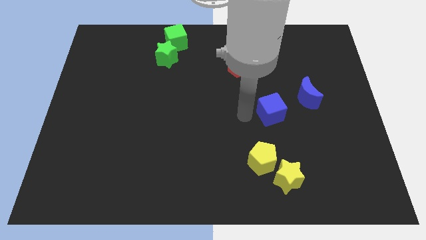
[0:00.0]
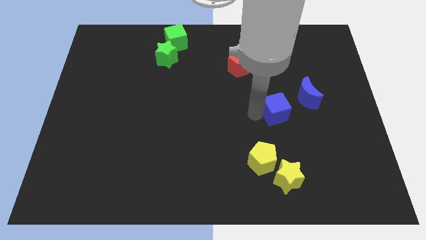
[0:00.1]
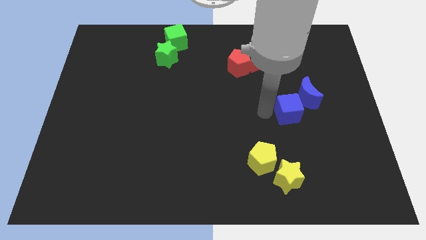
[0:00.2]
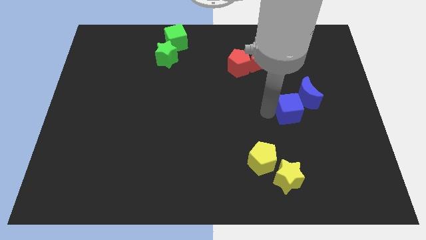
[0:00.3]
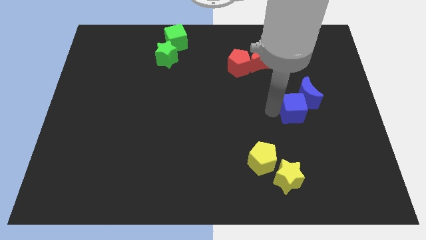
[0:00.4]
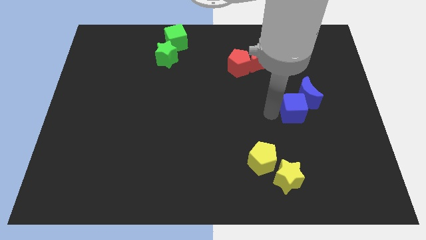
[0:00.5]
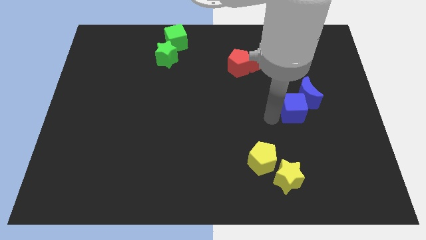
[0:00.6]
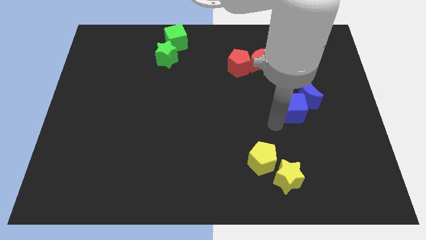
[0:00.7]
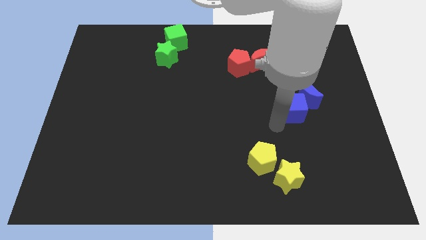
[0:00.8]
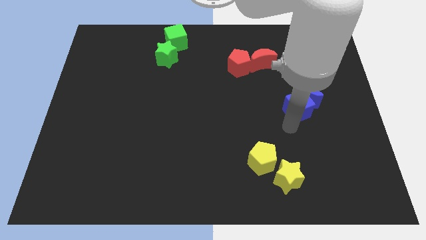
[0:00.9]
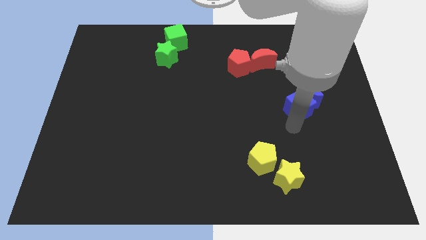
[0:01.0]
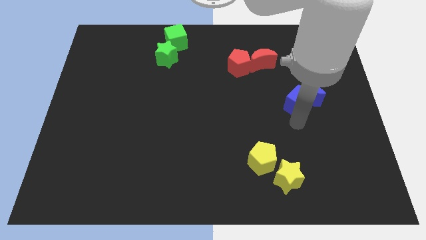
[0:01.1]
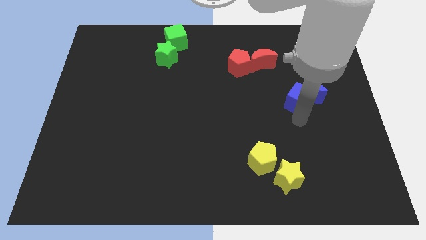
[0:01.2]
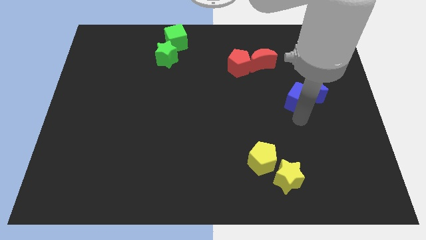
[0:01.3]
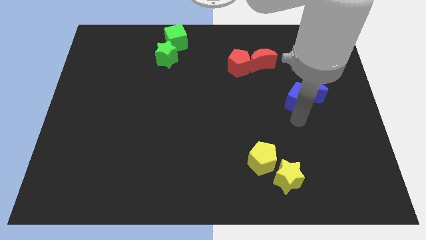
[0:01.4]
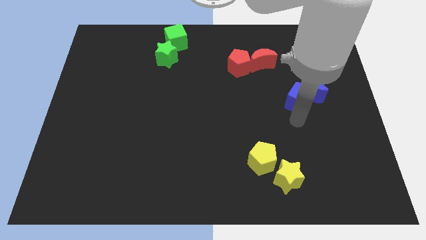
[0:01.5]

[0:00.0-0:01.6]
move the blue cube into the blue moon

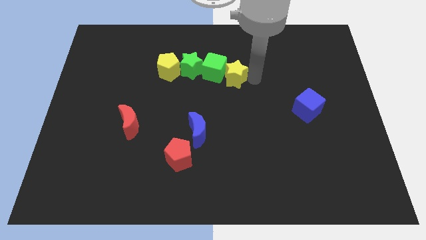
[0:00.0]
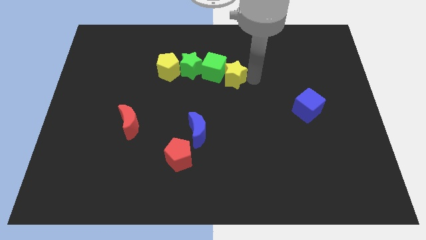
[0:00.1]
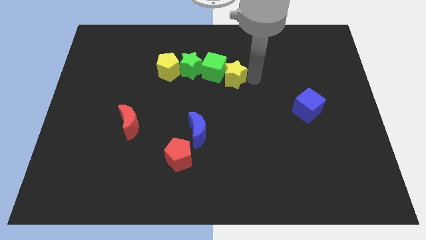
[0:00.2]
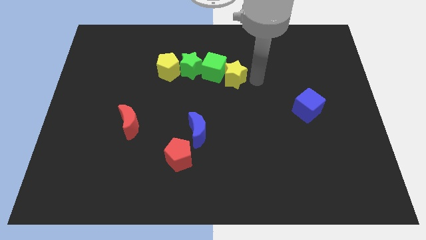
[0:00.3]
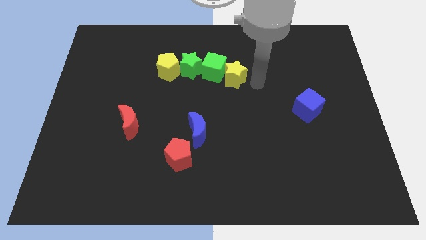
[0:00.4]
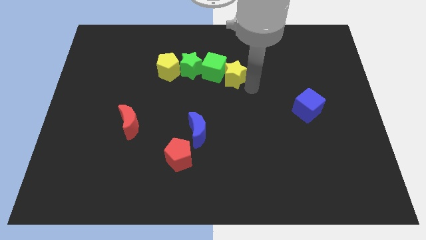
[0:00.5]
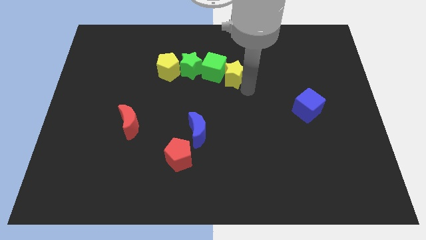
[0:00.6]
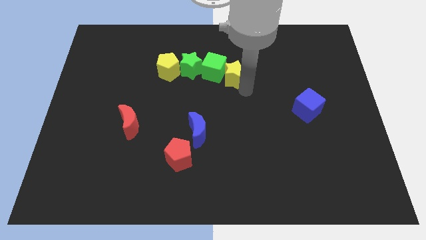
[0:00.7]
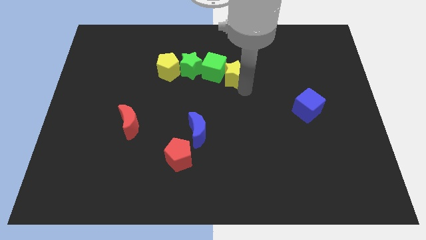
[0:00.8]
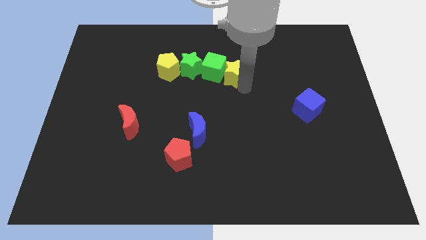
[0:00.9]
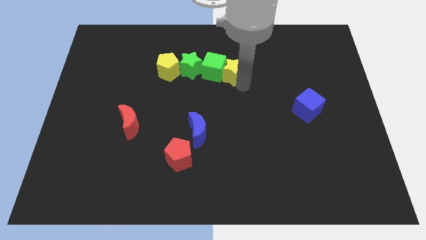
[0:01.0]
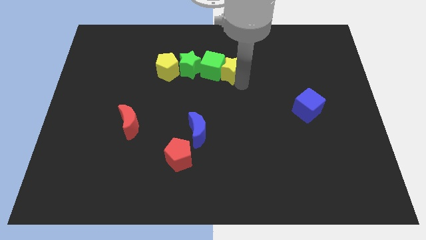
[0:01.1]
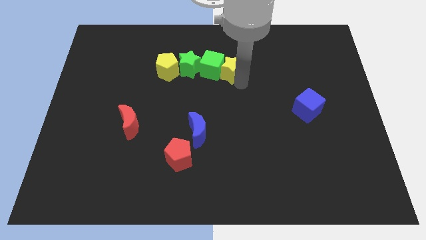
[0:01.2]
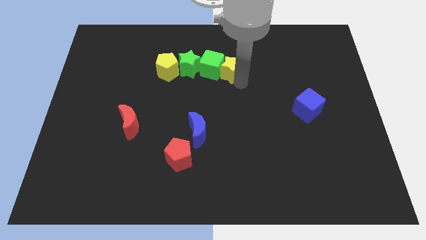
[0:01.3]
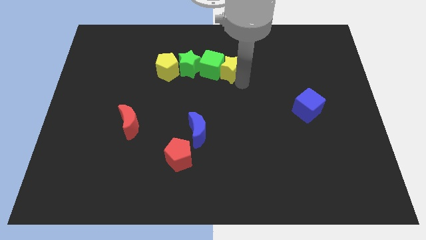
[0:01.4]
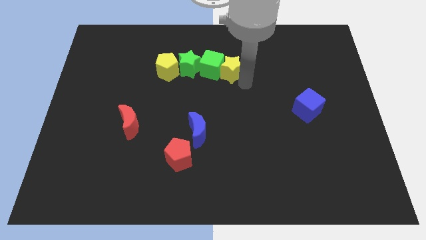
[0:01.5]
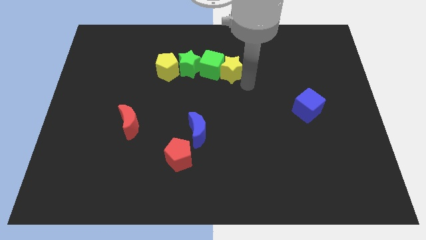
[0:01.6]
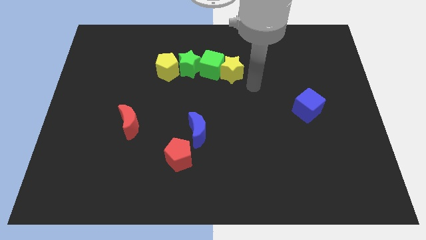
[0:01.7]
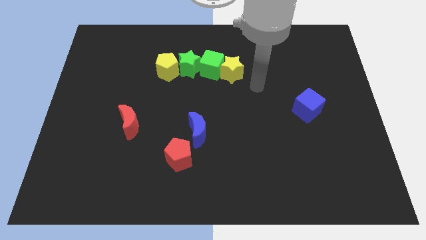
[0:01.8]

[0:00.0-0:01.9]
push the yellow star into the right of the green cube

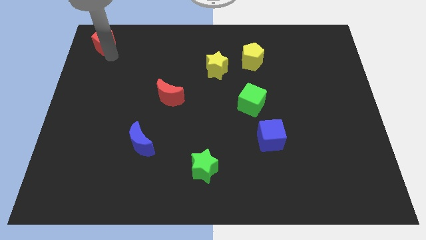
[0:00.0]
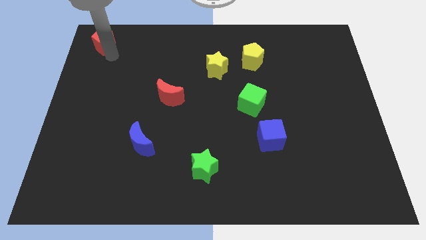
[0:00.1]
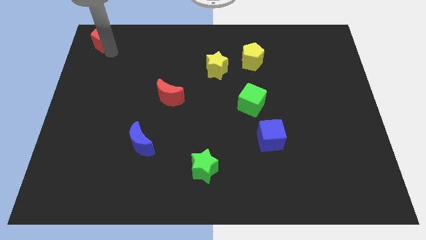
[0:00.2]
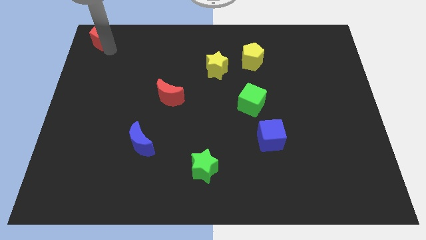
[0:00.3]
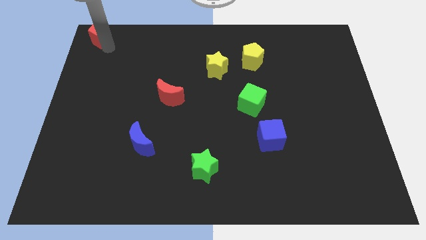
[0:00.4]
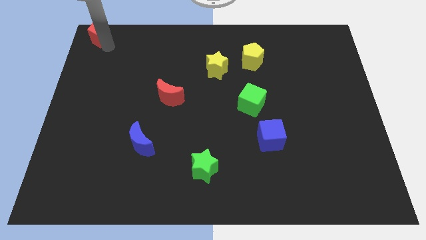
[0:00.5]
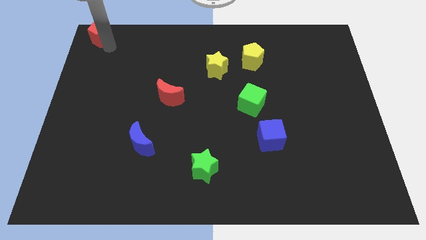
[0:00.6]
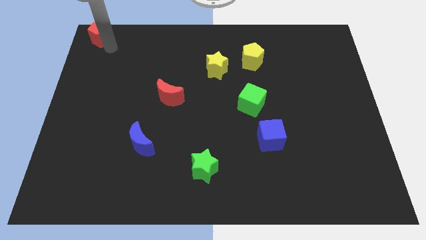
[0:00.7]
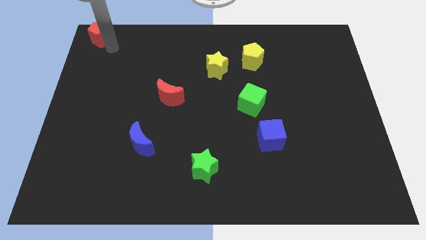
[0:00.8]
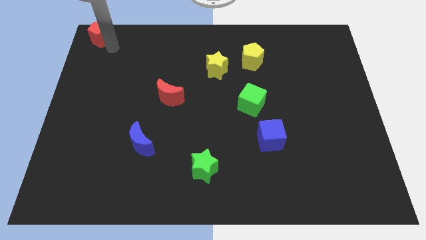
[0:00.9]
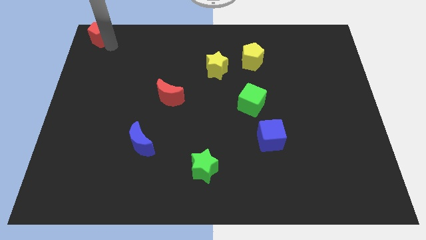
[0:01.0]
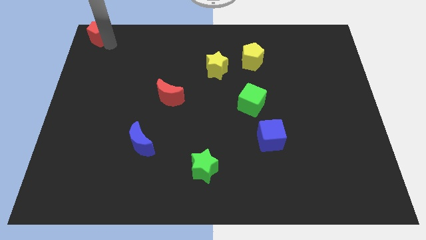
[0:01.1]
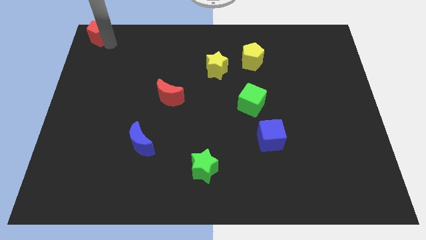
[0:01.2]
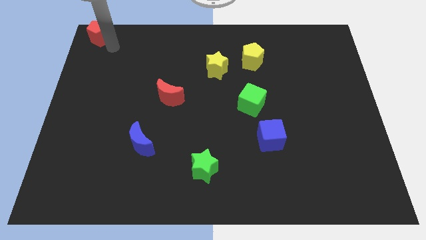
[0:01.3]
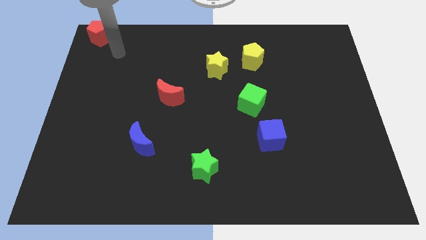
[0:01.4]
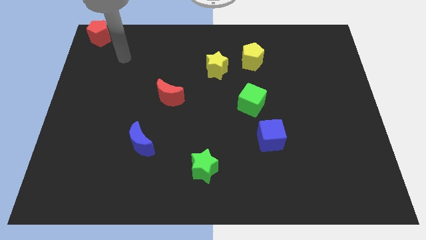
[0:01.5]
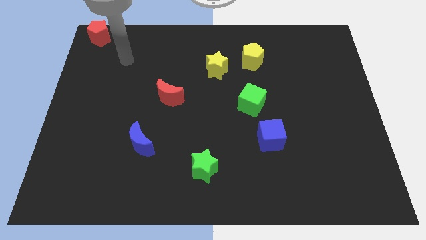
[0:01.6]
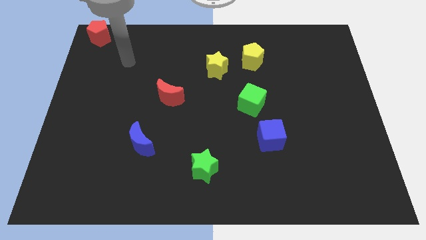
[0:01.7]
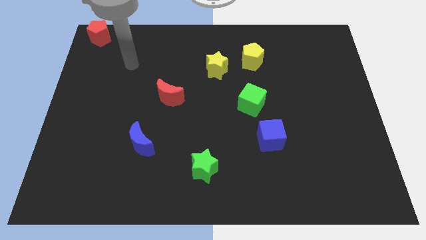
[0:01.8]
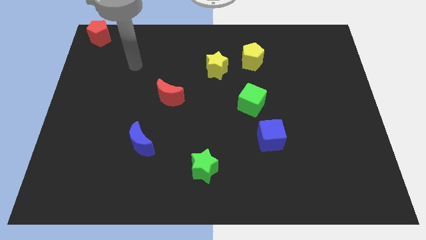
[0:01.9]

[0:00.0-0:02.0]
place the red pentagon at top left corner of the board

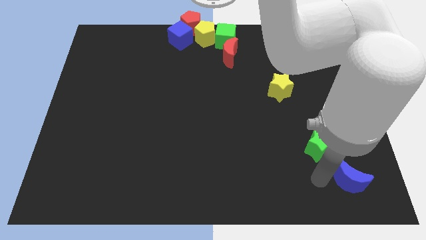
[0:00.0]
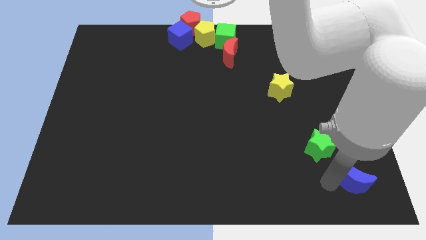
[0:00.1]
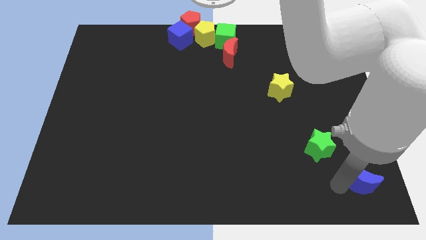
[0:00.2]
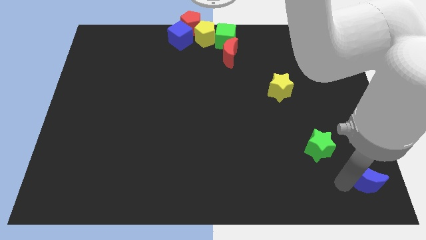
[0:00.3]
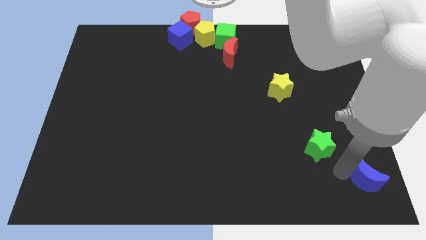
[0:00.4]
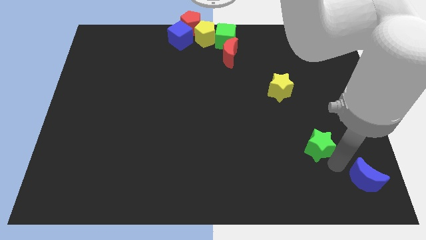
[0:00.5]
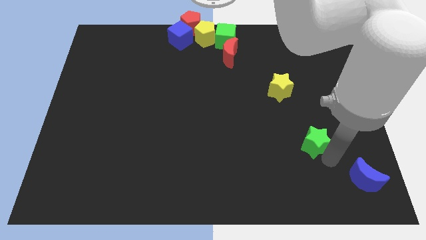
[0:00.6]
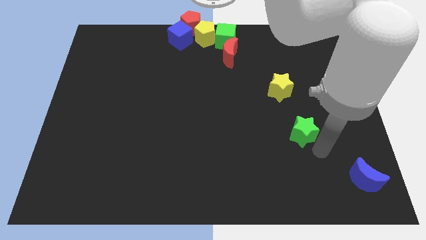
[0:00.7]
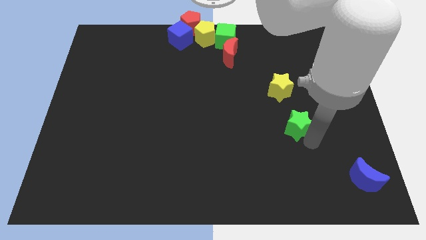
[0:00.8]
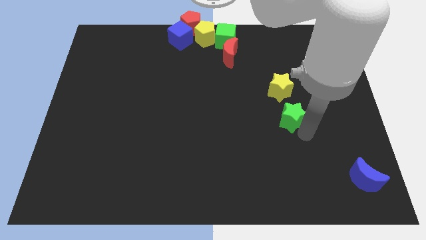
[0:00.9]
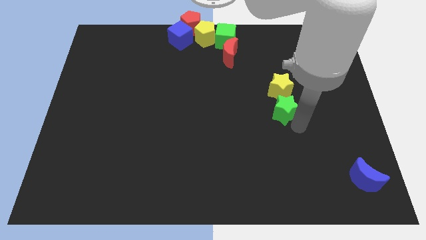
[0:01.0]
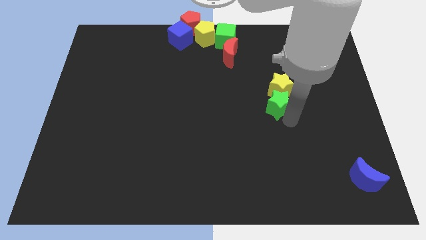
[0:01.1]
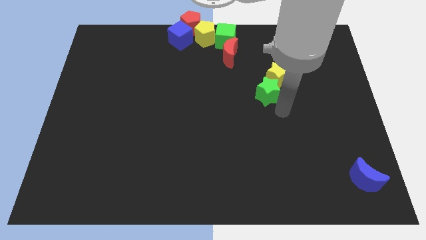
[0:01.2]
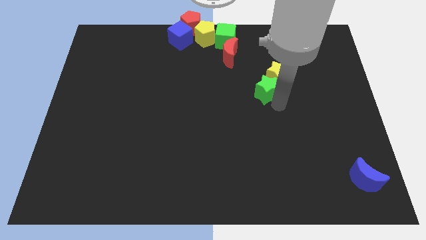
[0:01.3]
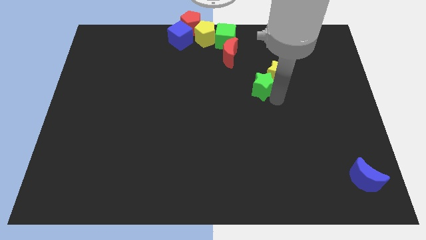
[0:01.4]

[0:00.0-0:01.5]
push the green star into the yellow star

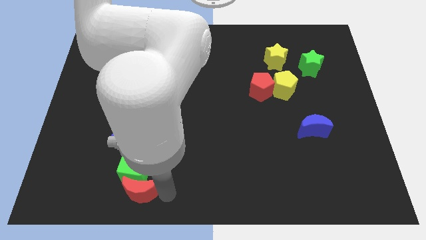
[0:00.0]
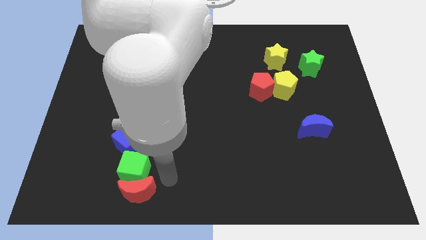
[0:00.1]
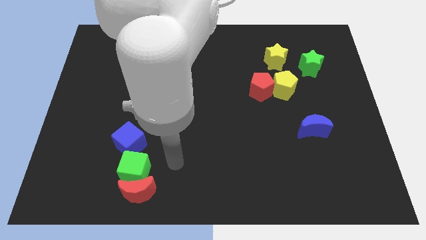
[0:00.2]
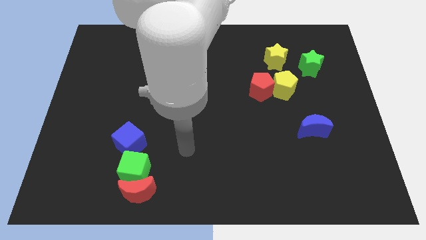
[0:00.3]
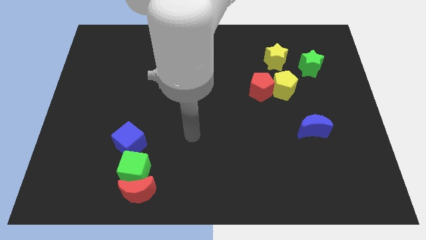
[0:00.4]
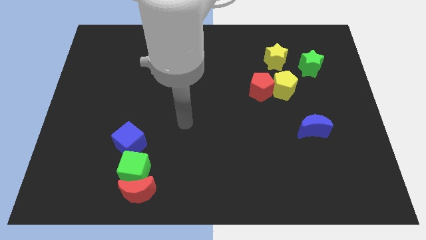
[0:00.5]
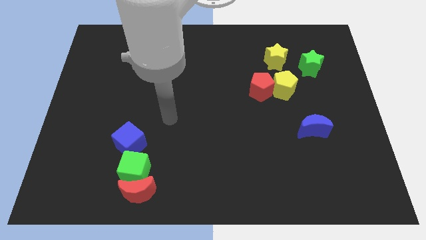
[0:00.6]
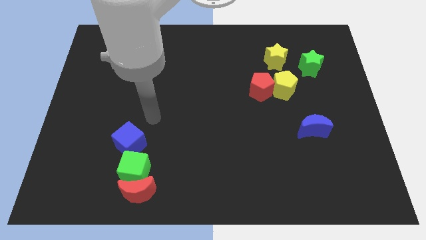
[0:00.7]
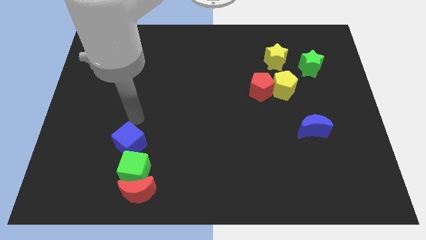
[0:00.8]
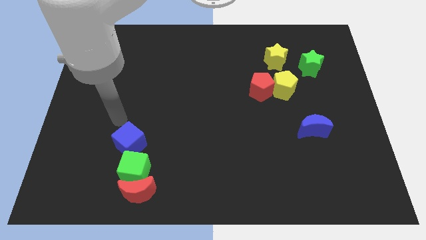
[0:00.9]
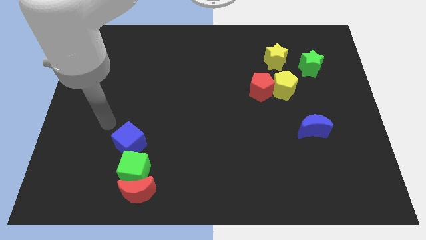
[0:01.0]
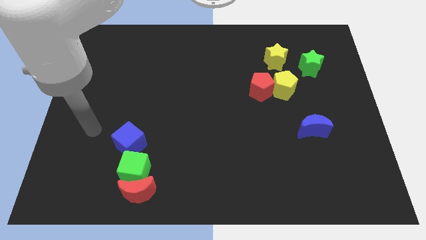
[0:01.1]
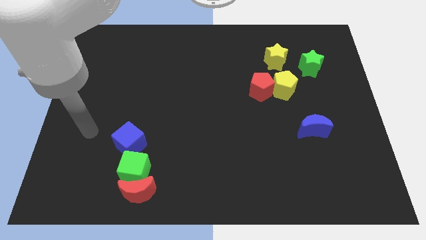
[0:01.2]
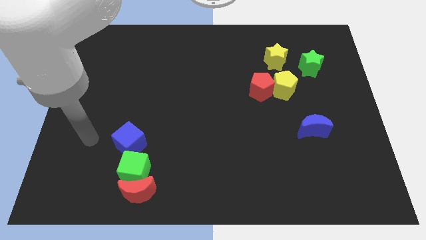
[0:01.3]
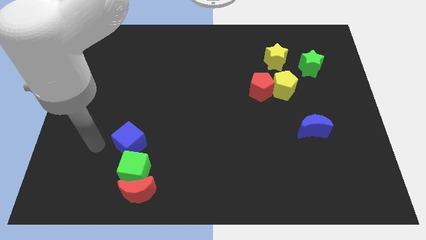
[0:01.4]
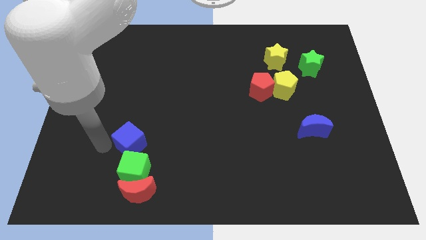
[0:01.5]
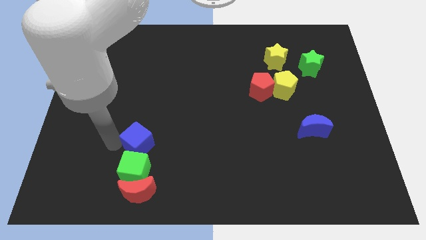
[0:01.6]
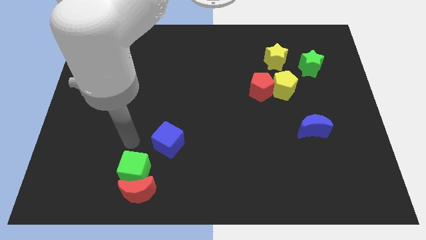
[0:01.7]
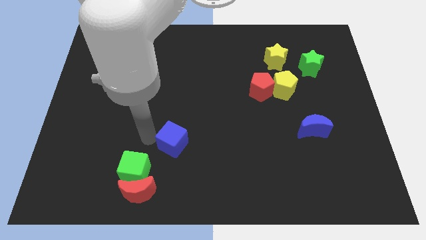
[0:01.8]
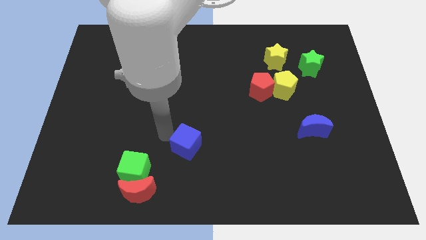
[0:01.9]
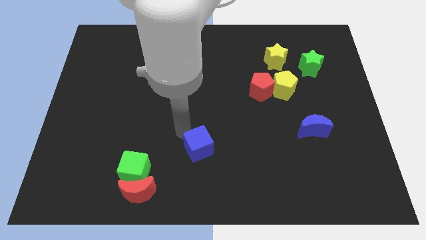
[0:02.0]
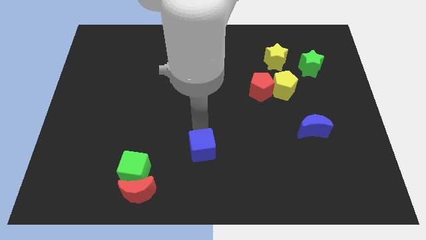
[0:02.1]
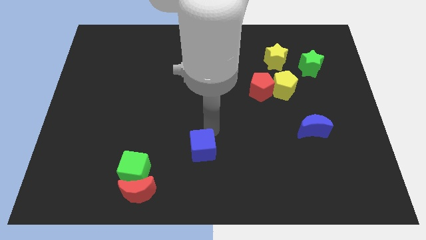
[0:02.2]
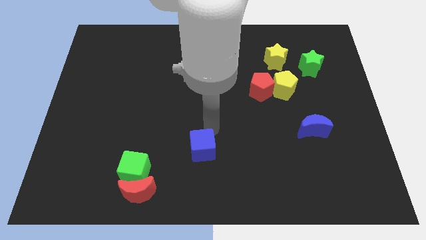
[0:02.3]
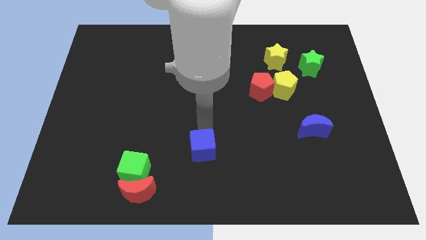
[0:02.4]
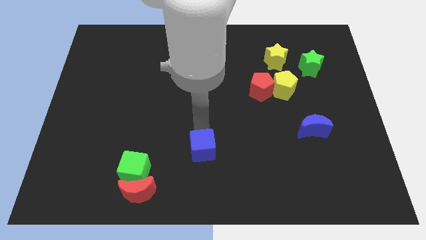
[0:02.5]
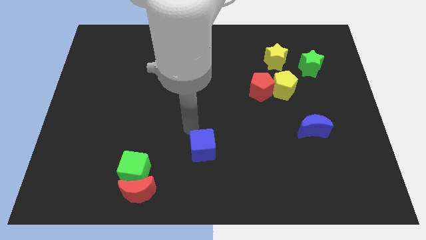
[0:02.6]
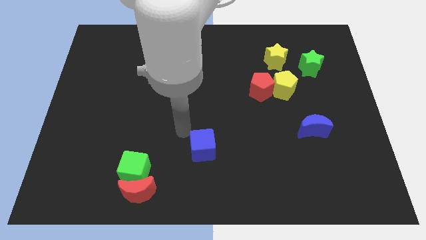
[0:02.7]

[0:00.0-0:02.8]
push blue cube slightly towards right
